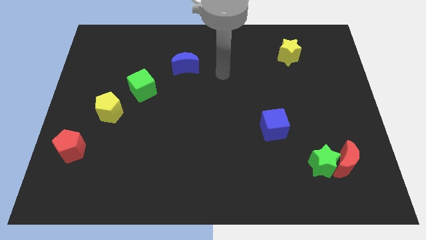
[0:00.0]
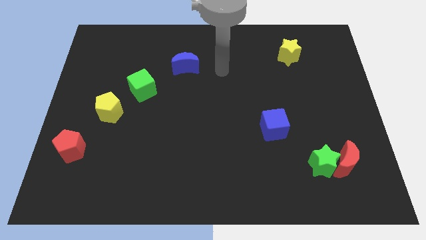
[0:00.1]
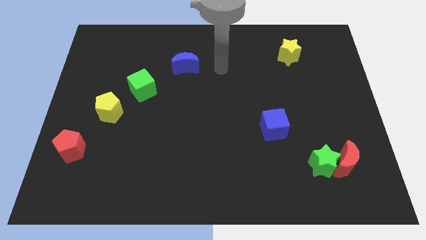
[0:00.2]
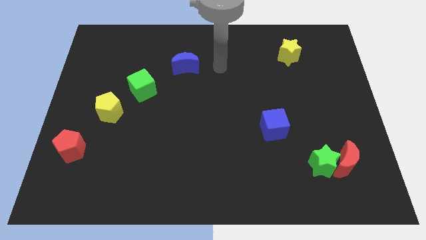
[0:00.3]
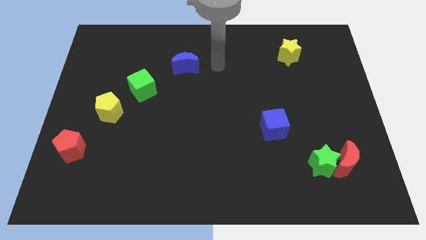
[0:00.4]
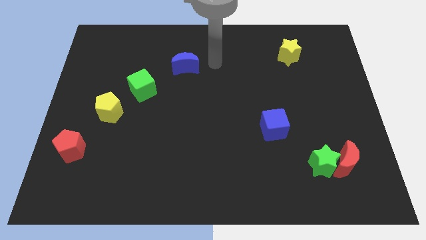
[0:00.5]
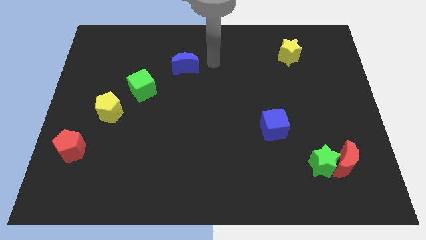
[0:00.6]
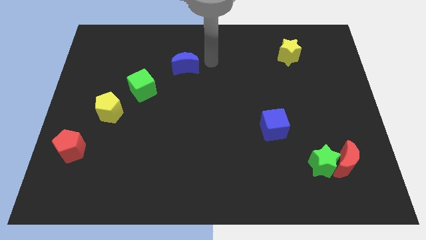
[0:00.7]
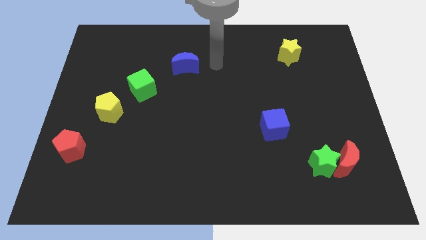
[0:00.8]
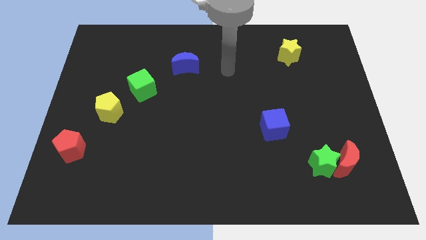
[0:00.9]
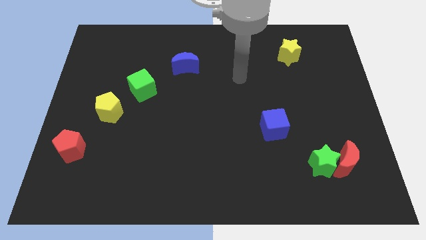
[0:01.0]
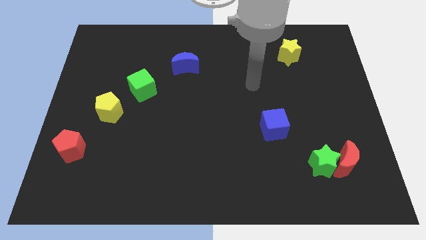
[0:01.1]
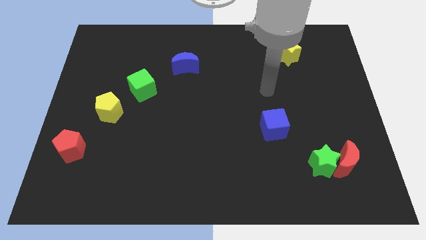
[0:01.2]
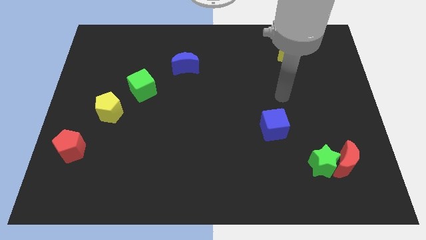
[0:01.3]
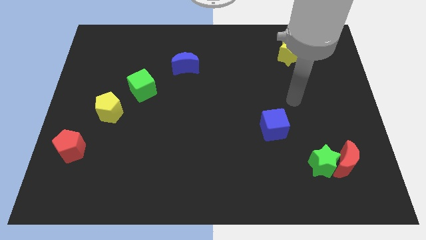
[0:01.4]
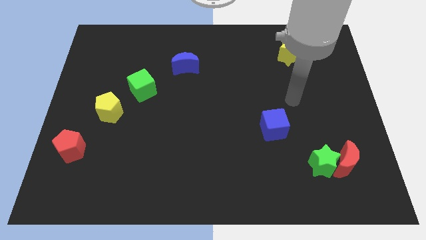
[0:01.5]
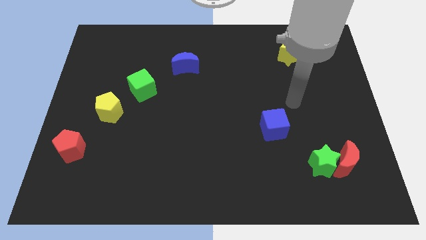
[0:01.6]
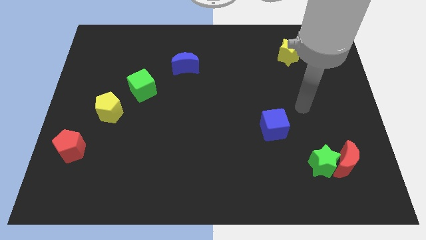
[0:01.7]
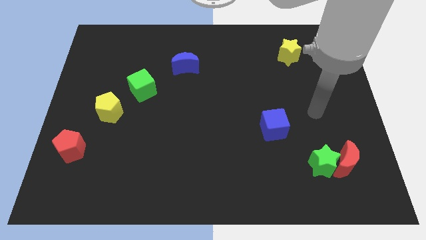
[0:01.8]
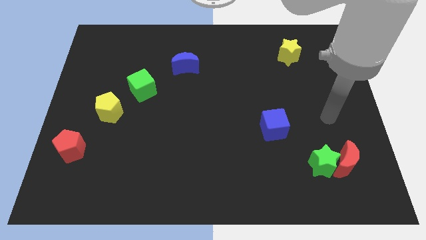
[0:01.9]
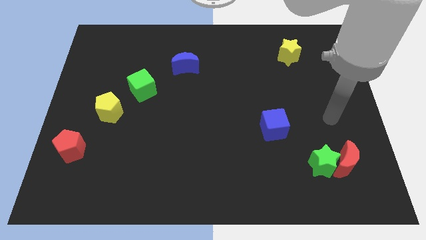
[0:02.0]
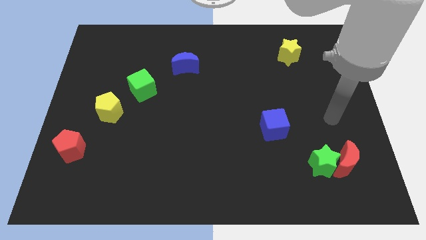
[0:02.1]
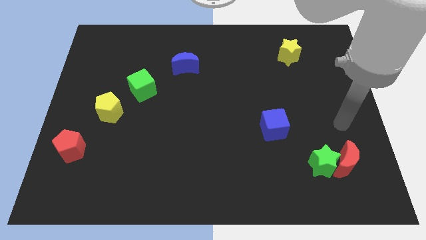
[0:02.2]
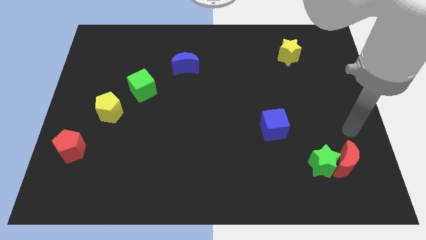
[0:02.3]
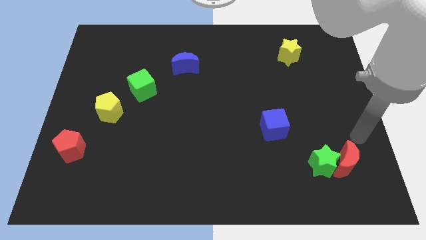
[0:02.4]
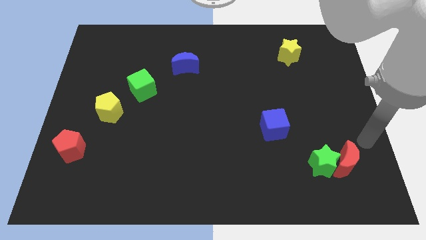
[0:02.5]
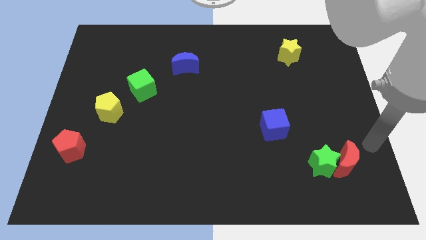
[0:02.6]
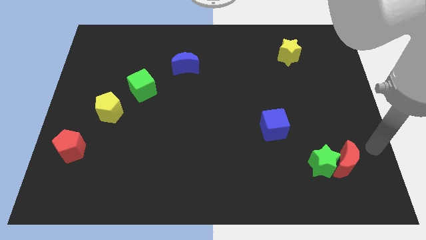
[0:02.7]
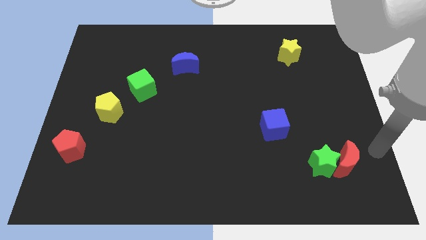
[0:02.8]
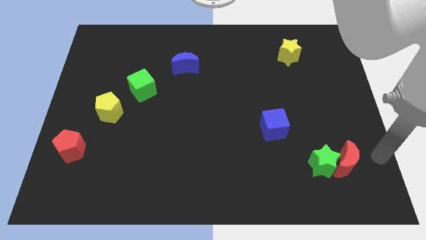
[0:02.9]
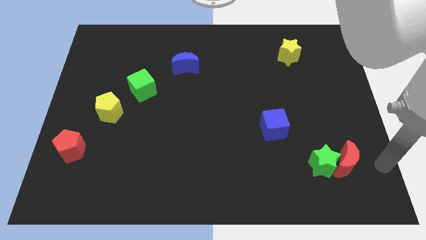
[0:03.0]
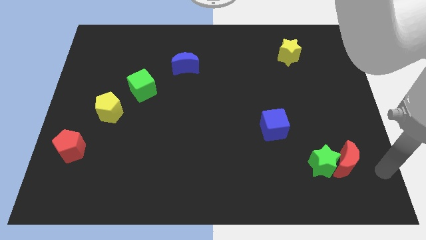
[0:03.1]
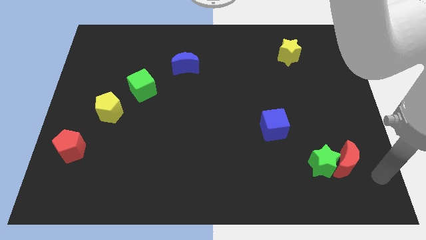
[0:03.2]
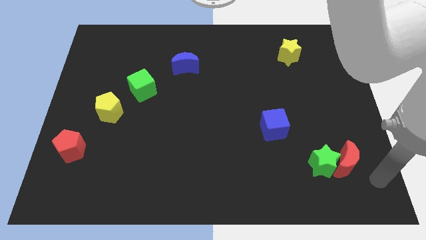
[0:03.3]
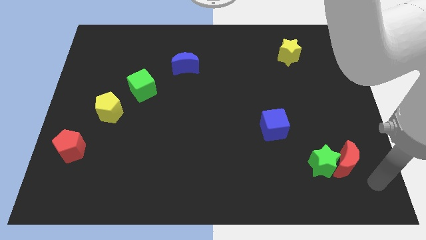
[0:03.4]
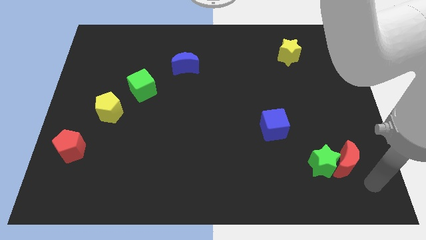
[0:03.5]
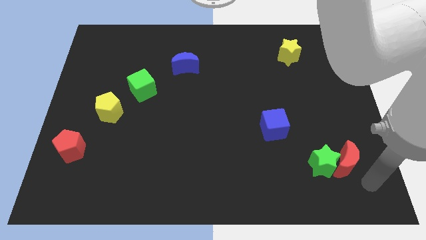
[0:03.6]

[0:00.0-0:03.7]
place arm at bottom right

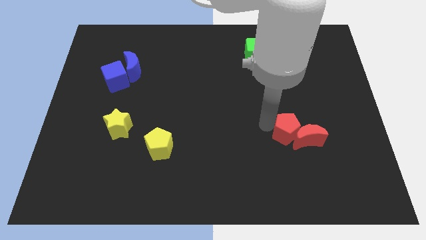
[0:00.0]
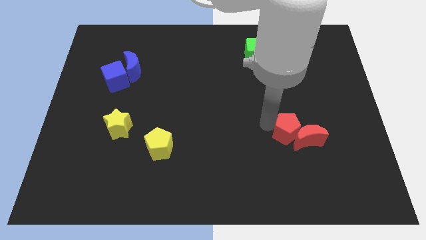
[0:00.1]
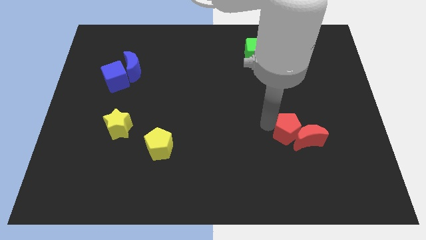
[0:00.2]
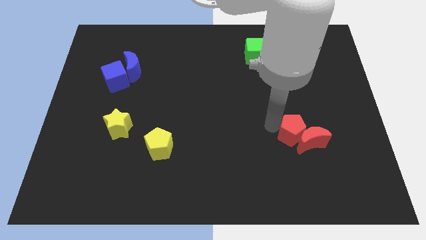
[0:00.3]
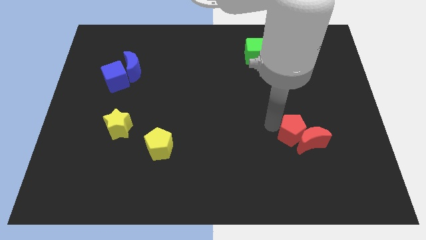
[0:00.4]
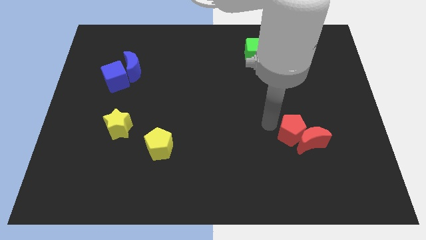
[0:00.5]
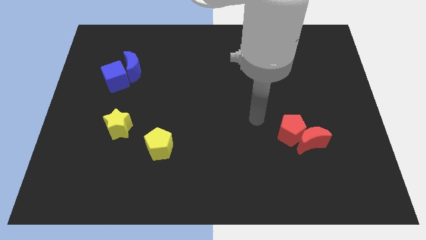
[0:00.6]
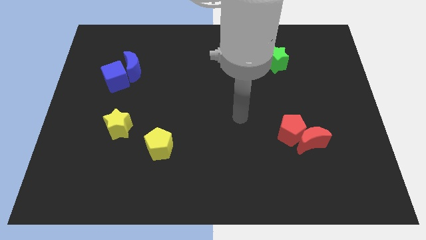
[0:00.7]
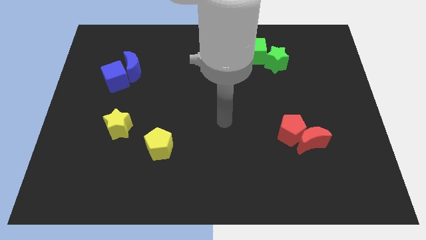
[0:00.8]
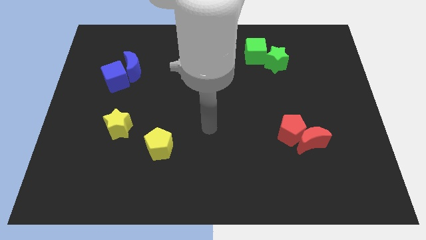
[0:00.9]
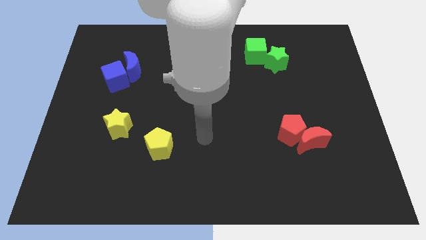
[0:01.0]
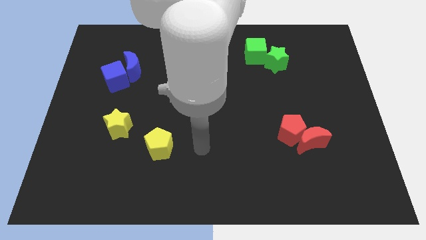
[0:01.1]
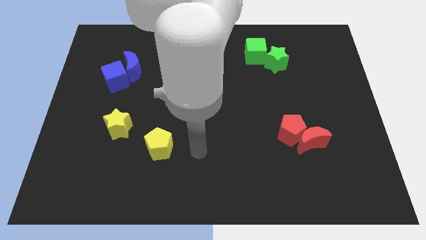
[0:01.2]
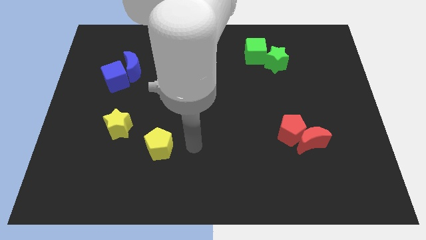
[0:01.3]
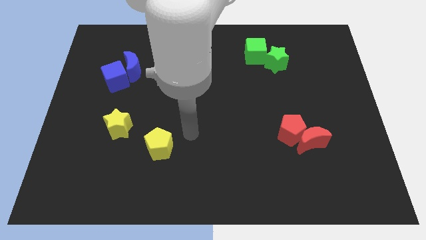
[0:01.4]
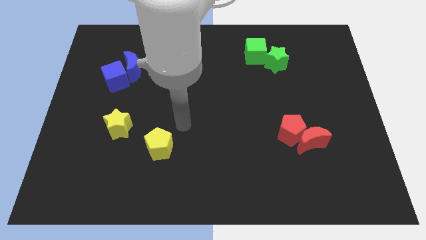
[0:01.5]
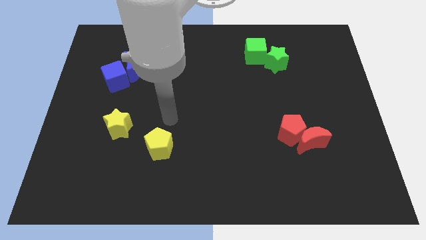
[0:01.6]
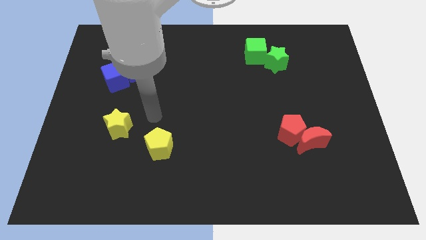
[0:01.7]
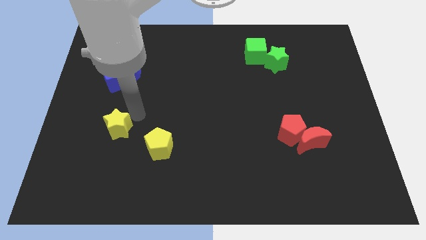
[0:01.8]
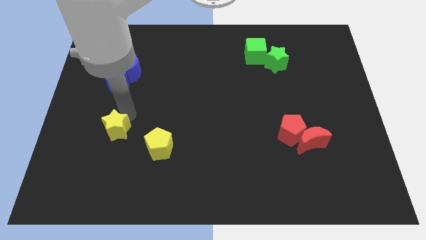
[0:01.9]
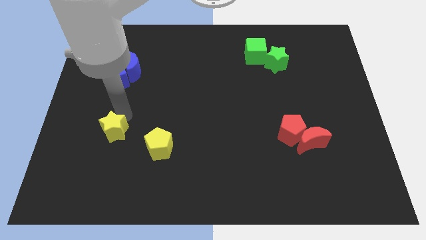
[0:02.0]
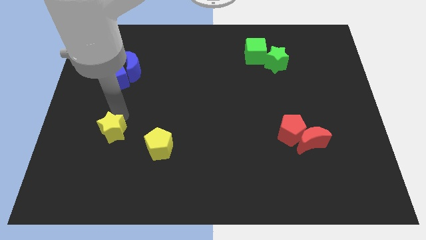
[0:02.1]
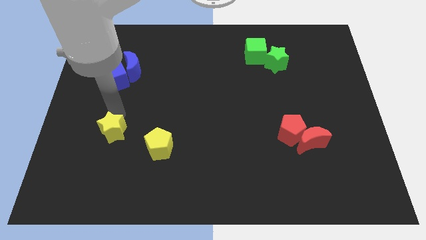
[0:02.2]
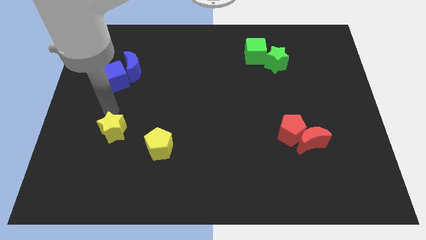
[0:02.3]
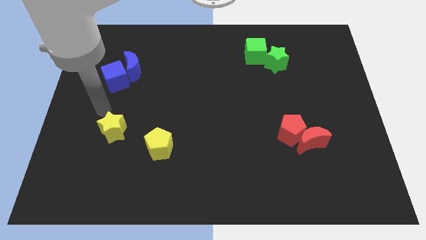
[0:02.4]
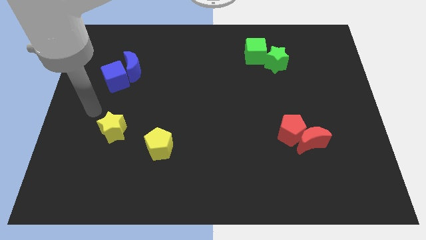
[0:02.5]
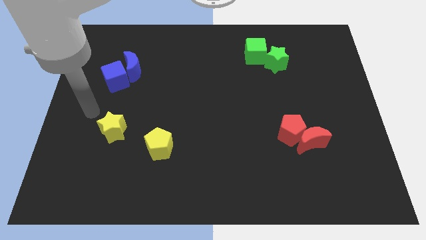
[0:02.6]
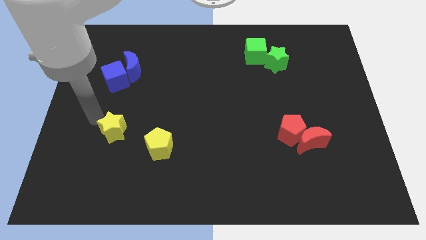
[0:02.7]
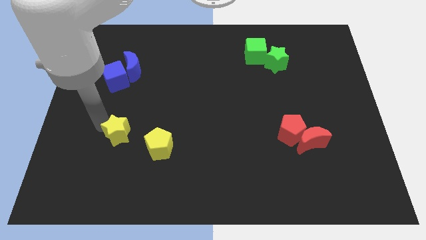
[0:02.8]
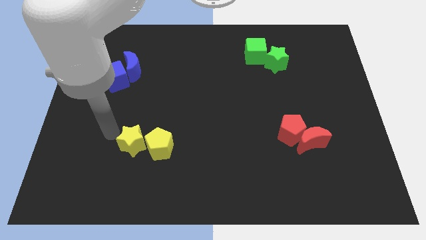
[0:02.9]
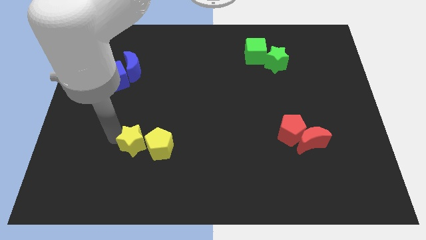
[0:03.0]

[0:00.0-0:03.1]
push the yellow star into the yellow pentagon

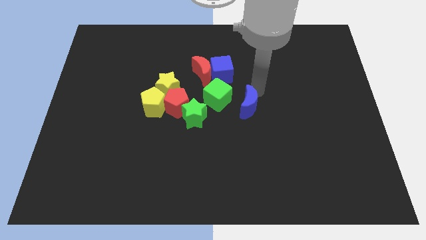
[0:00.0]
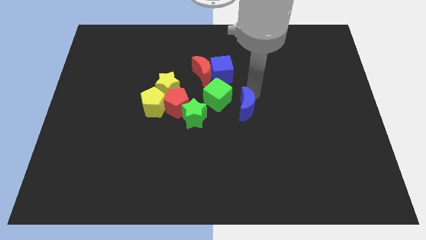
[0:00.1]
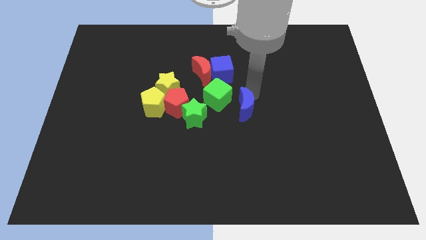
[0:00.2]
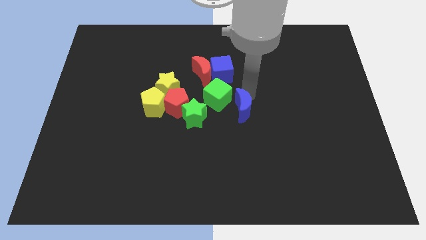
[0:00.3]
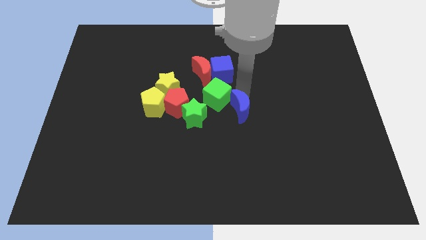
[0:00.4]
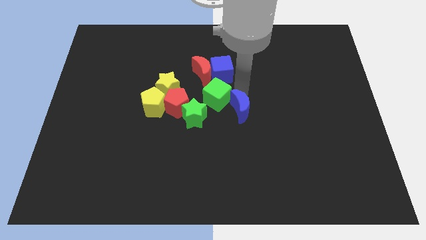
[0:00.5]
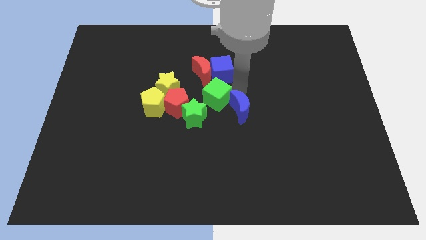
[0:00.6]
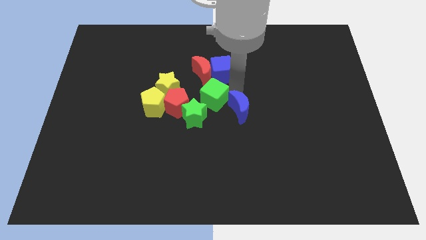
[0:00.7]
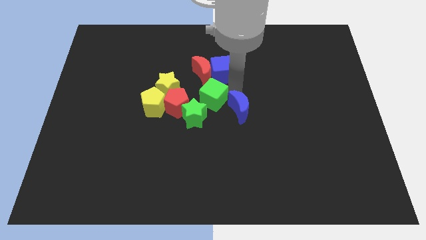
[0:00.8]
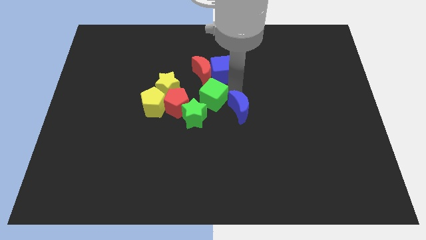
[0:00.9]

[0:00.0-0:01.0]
push the blue crescent into the green cube

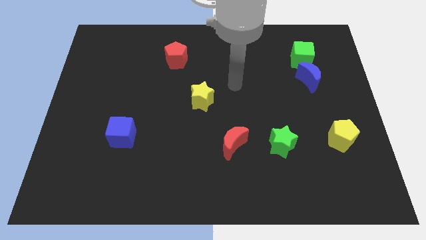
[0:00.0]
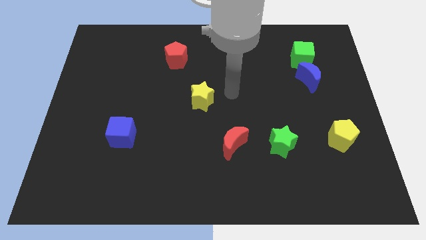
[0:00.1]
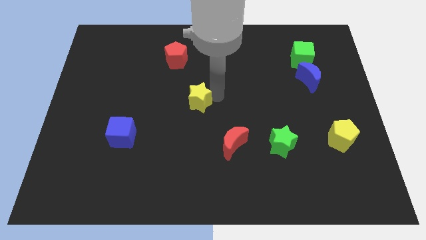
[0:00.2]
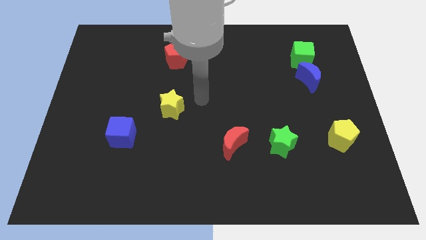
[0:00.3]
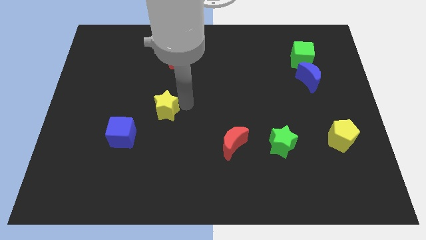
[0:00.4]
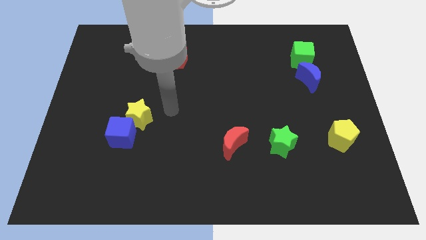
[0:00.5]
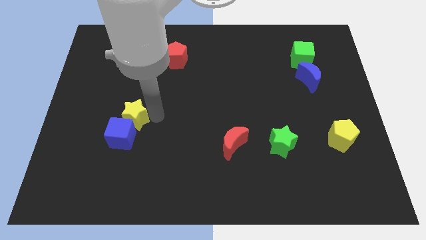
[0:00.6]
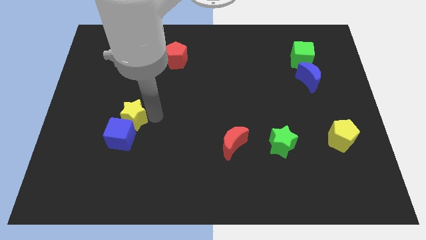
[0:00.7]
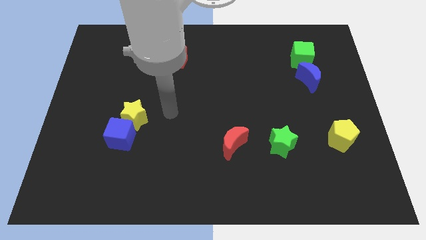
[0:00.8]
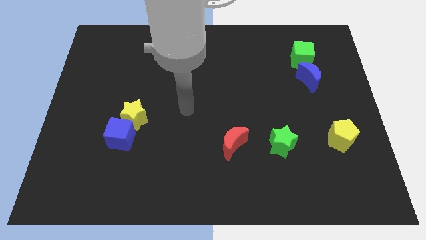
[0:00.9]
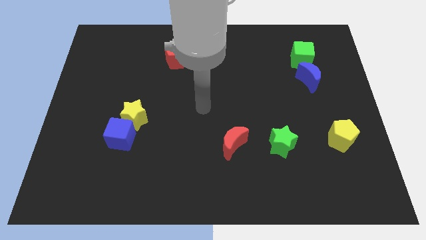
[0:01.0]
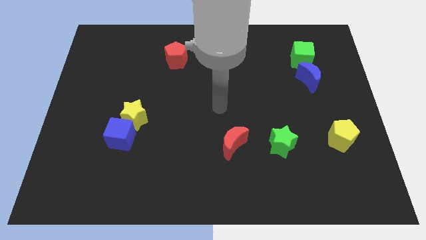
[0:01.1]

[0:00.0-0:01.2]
push the yellow star into the top side of the blue cube
